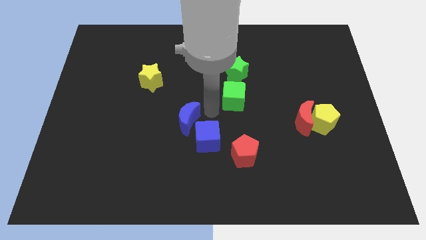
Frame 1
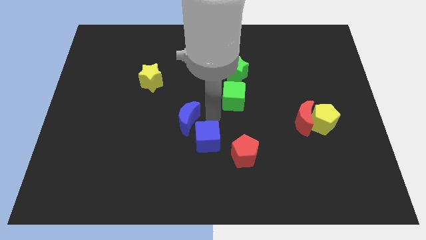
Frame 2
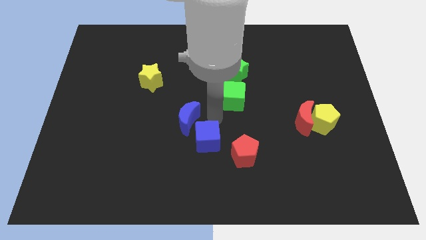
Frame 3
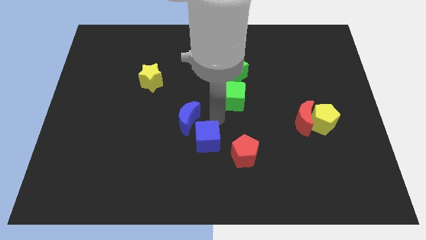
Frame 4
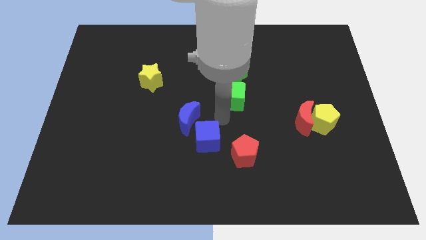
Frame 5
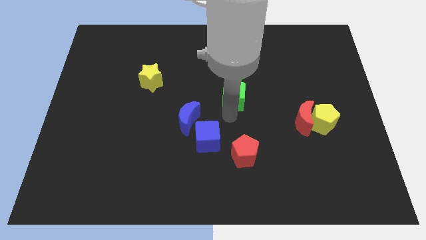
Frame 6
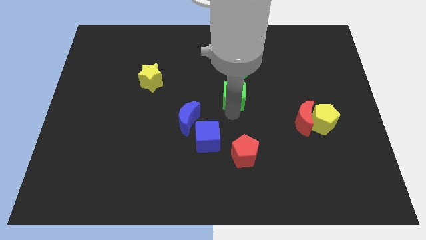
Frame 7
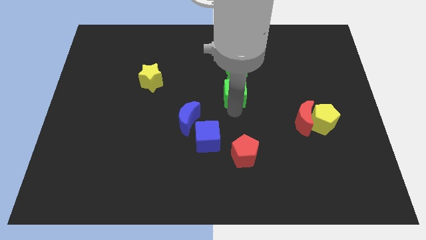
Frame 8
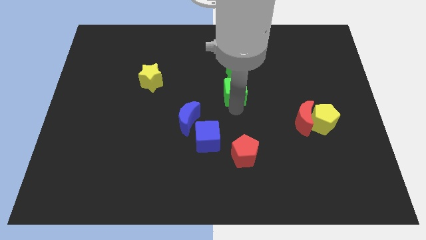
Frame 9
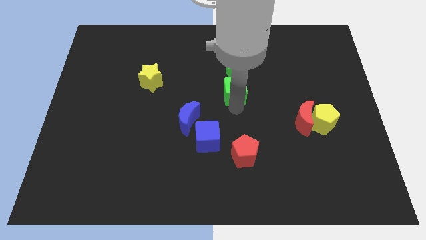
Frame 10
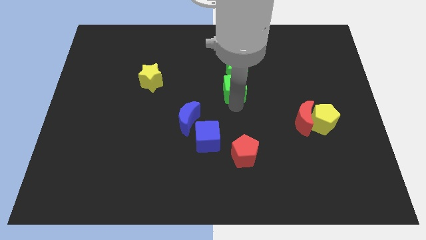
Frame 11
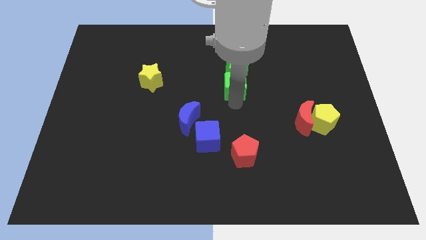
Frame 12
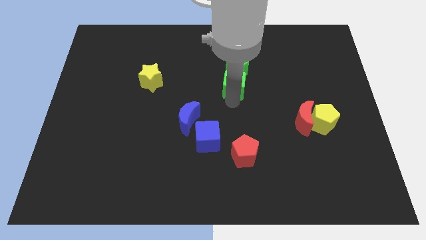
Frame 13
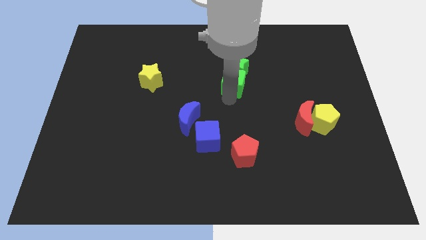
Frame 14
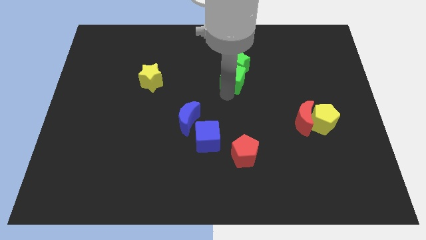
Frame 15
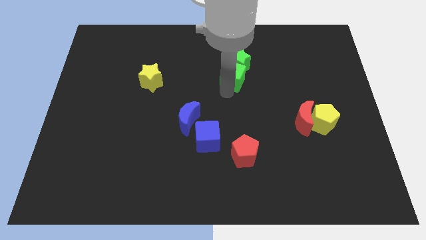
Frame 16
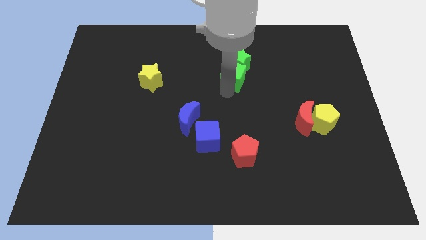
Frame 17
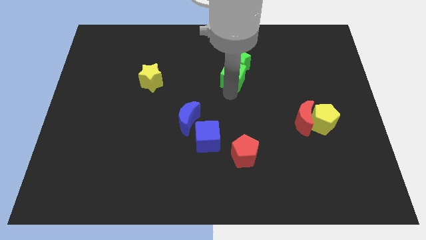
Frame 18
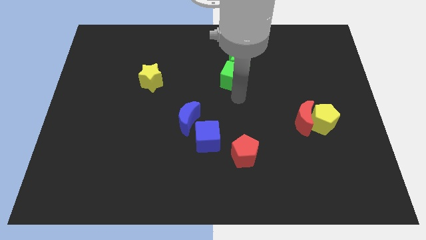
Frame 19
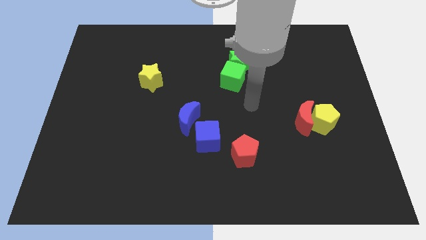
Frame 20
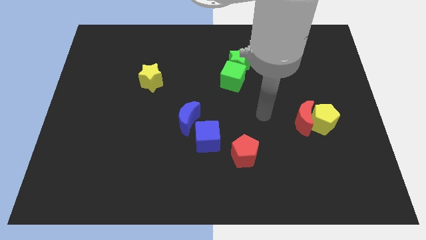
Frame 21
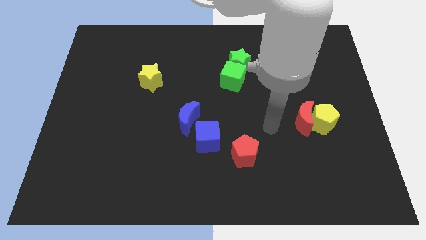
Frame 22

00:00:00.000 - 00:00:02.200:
push the green blocks upwards

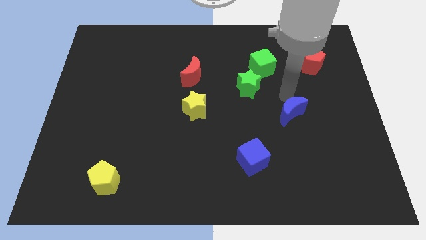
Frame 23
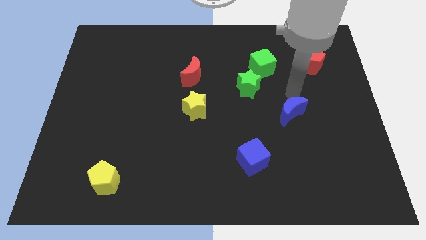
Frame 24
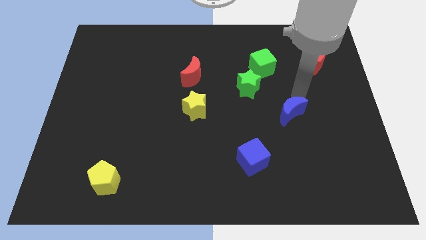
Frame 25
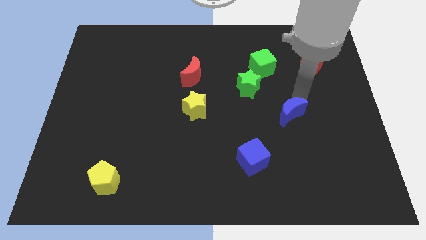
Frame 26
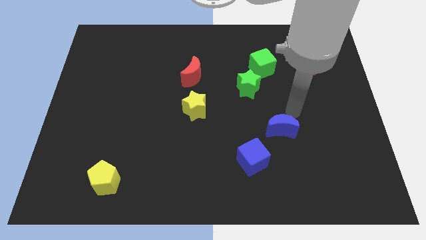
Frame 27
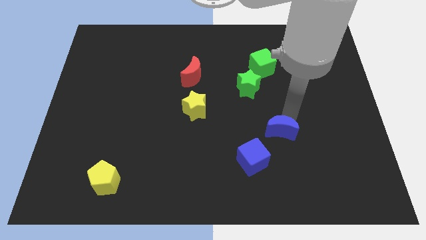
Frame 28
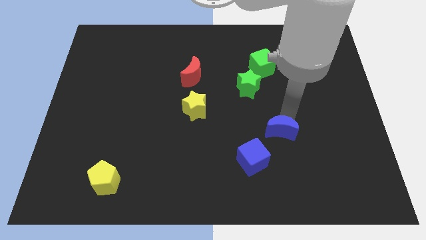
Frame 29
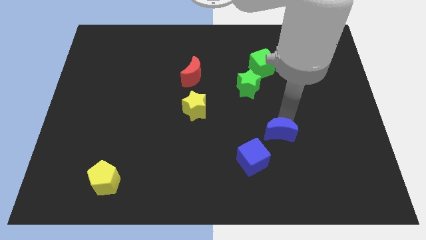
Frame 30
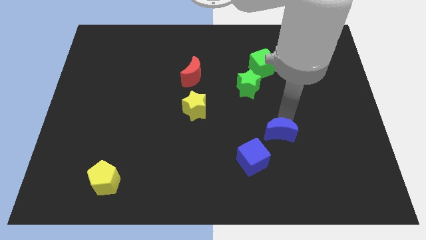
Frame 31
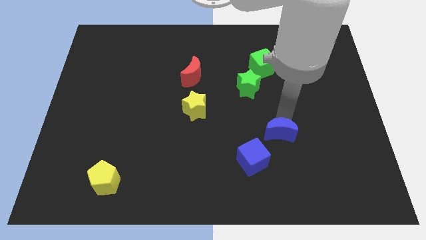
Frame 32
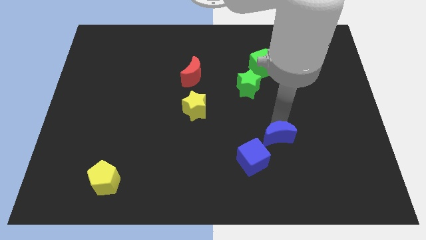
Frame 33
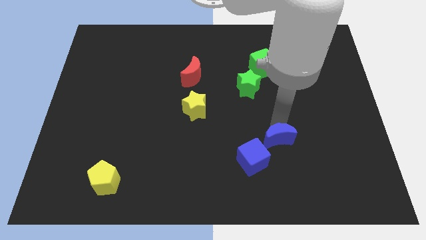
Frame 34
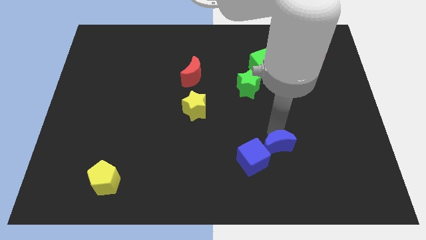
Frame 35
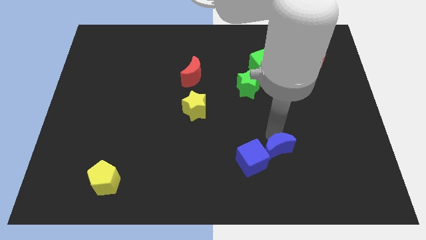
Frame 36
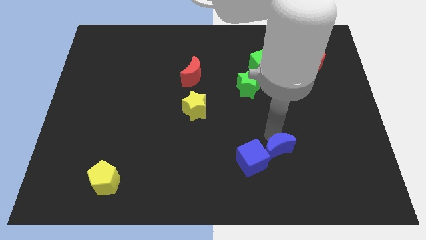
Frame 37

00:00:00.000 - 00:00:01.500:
push the blue crescent into the blue cube

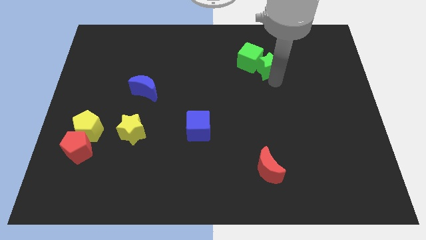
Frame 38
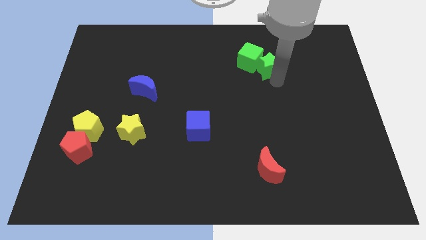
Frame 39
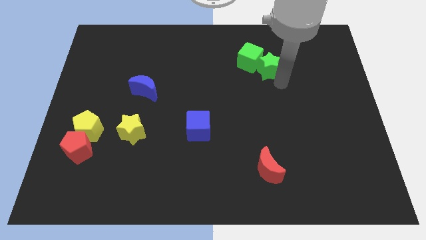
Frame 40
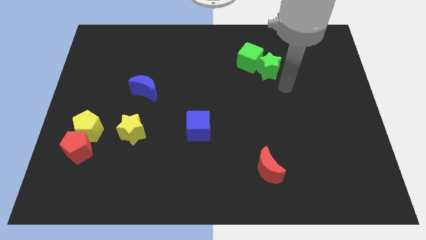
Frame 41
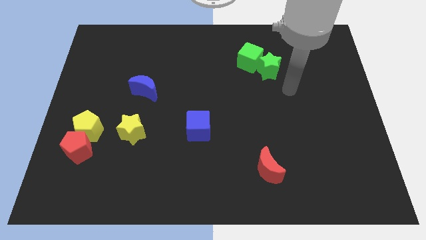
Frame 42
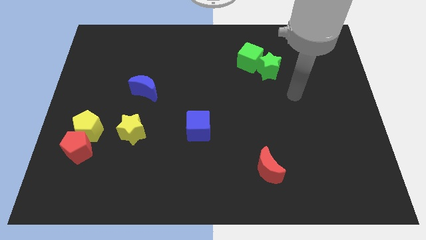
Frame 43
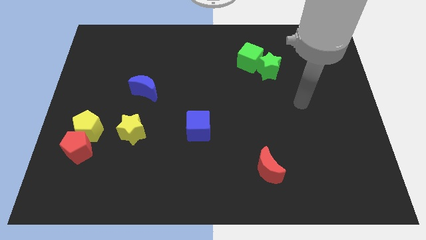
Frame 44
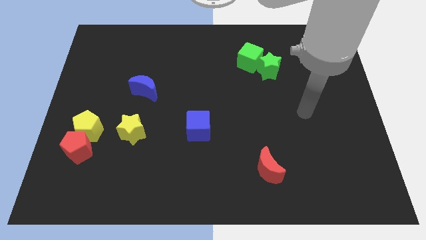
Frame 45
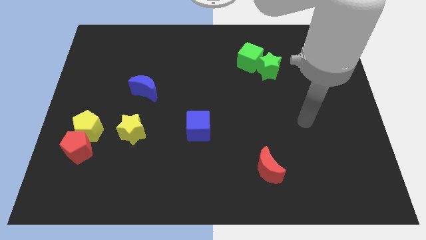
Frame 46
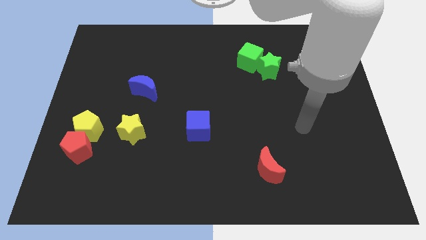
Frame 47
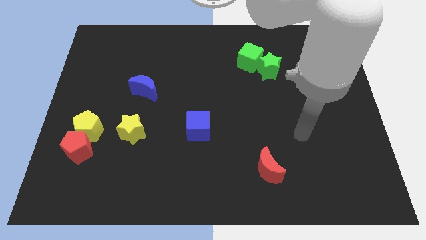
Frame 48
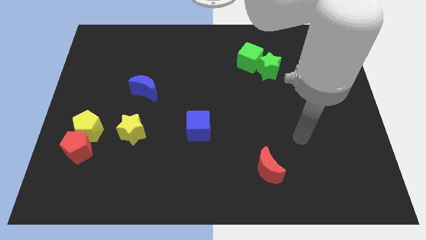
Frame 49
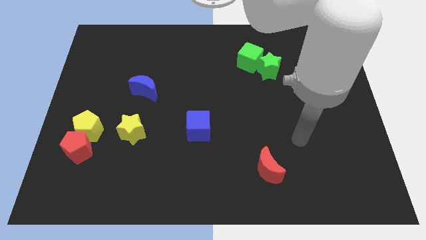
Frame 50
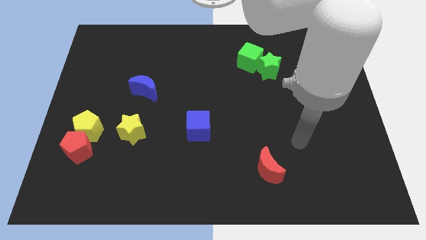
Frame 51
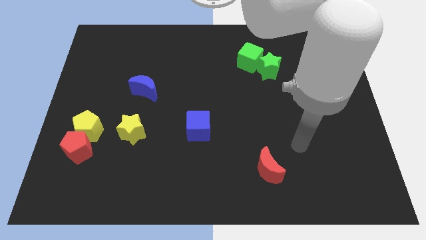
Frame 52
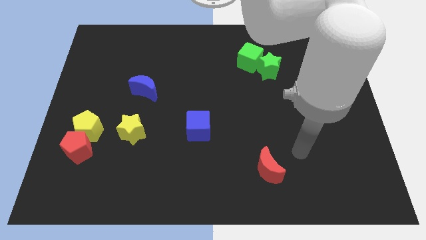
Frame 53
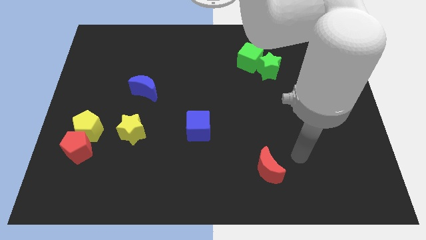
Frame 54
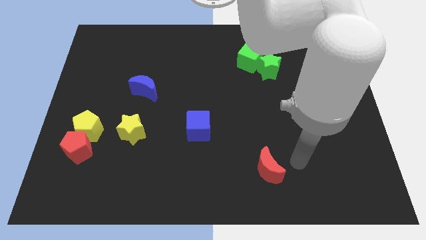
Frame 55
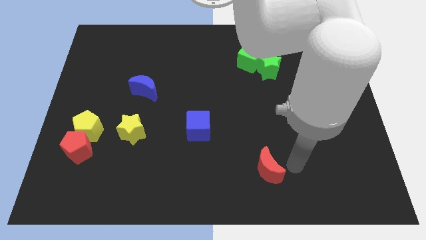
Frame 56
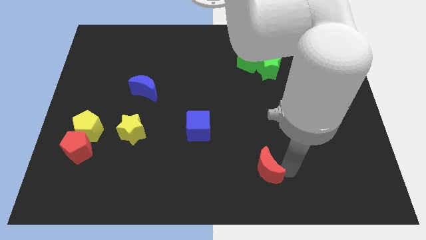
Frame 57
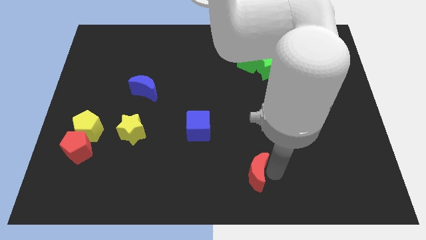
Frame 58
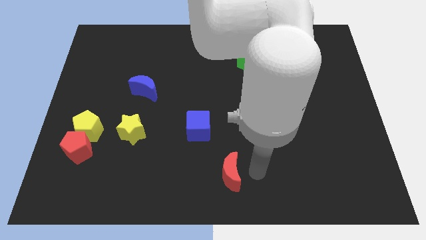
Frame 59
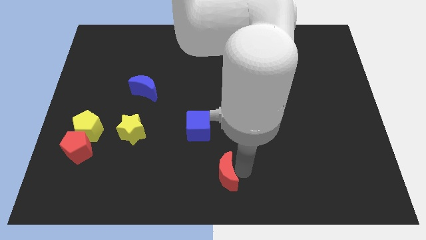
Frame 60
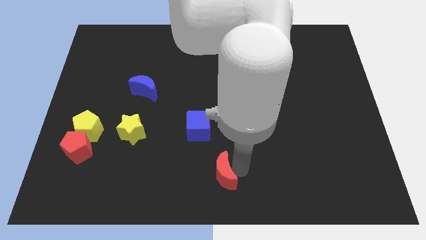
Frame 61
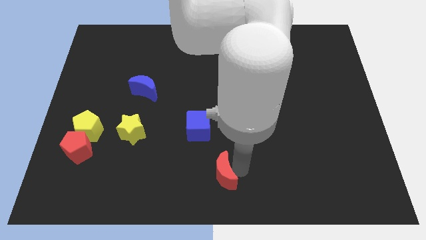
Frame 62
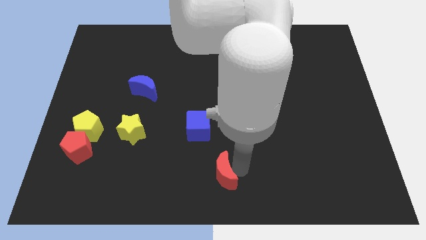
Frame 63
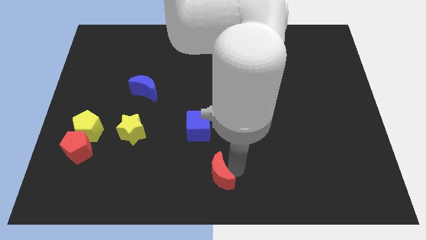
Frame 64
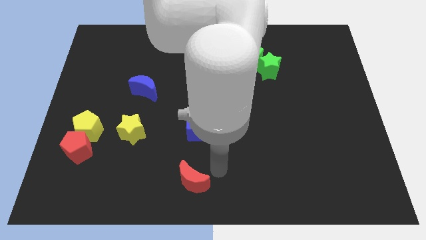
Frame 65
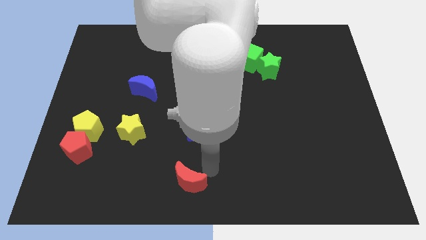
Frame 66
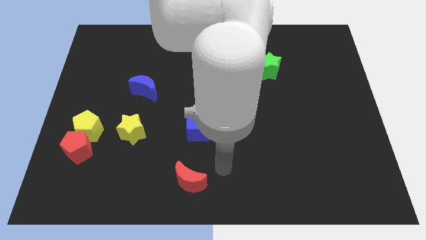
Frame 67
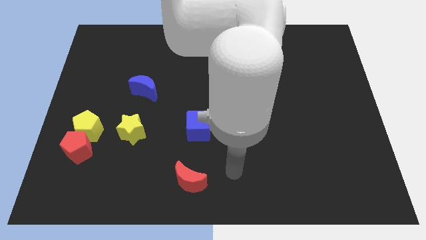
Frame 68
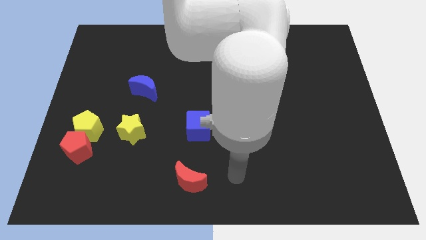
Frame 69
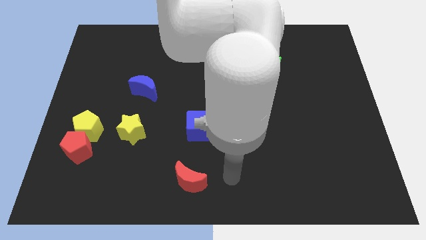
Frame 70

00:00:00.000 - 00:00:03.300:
put the red crescent vertically below the blue cube

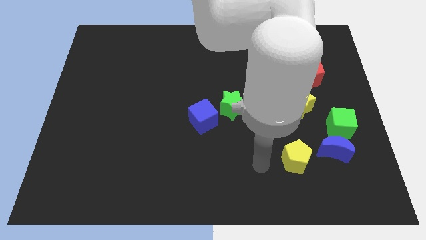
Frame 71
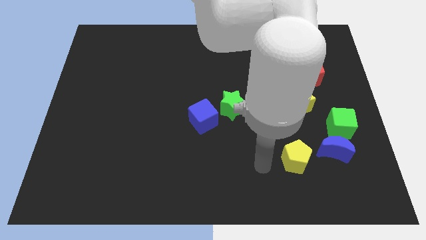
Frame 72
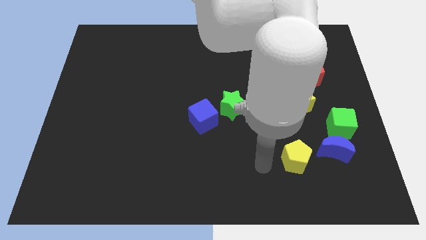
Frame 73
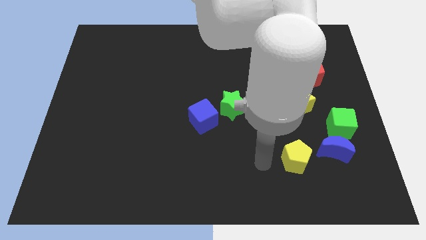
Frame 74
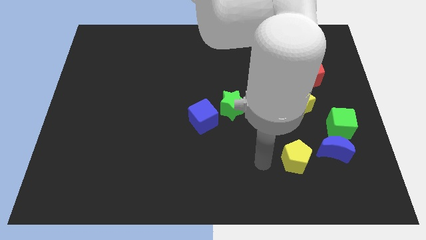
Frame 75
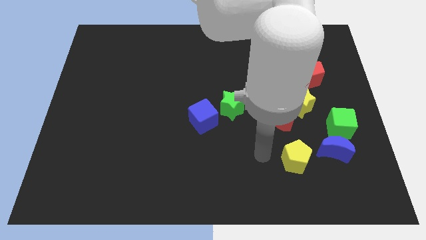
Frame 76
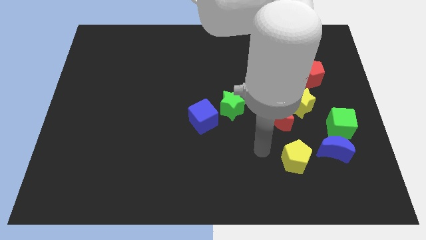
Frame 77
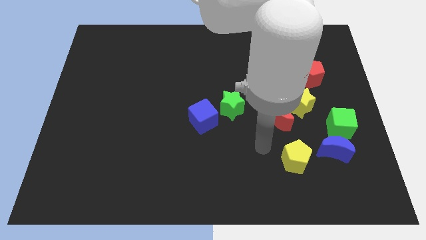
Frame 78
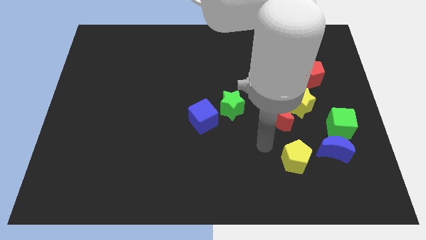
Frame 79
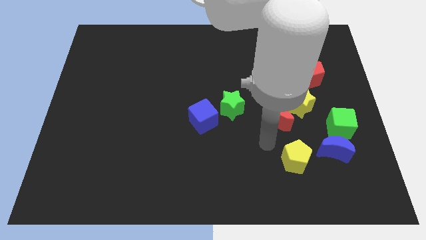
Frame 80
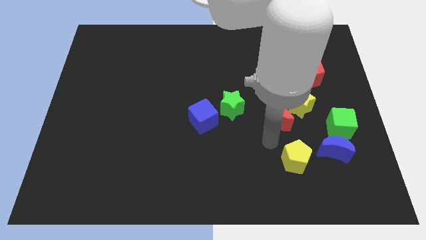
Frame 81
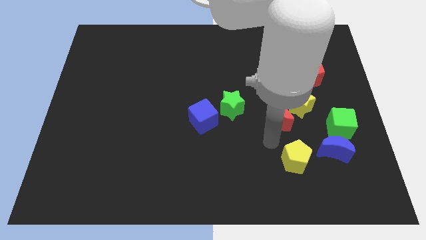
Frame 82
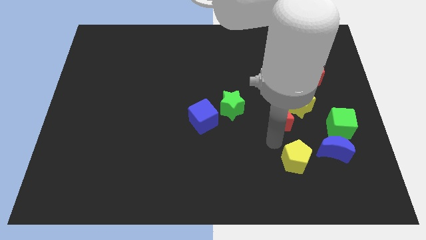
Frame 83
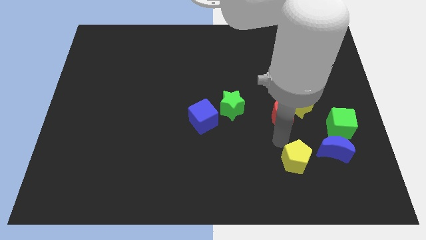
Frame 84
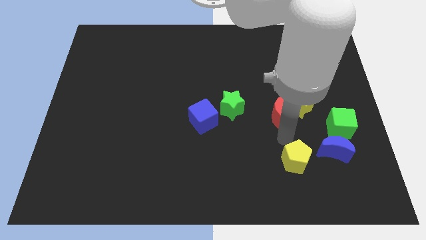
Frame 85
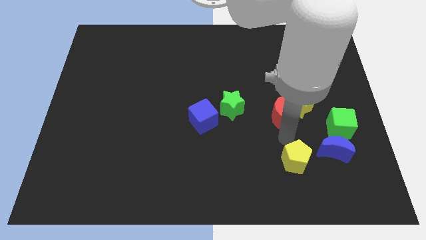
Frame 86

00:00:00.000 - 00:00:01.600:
place your arm down to the red moon

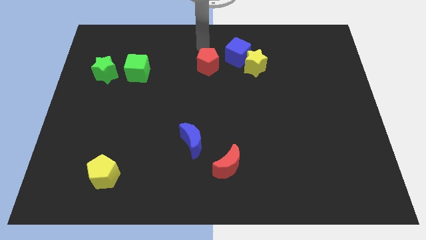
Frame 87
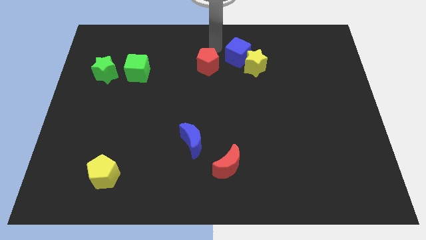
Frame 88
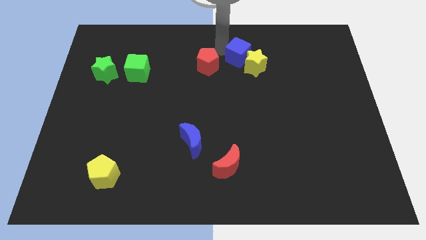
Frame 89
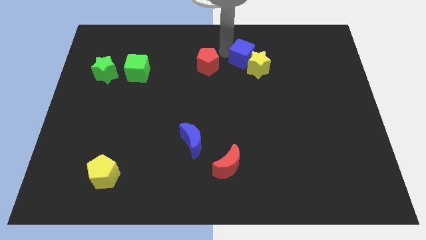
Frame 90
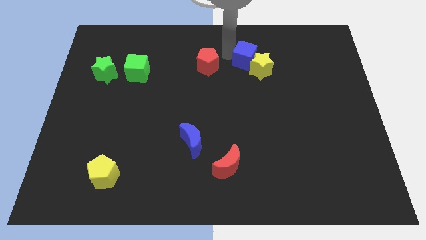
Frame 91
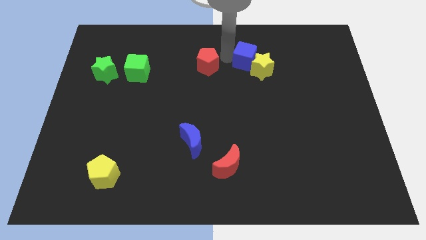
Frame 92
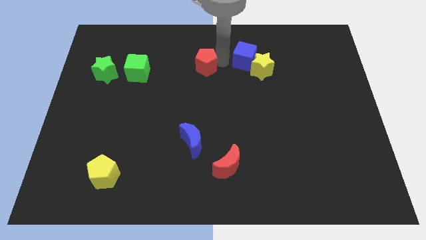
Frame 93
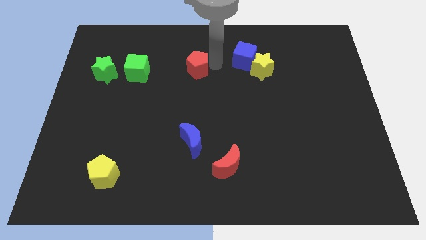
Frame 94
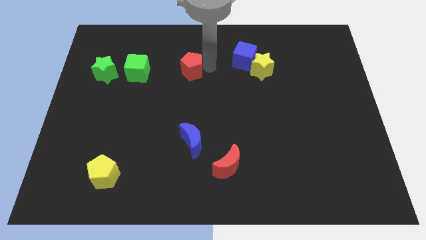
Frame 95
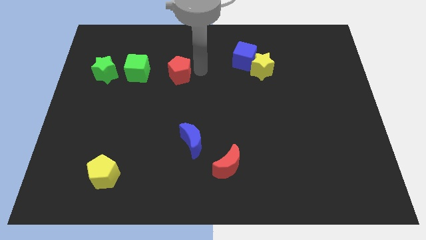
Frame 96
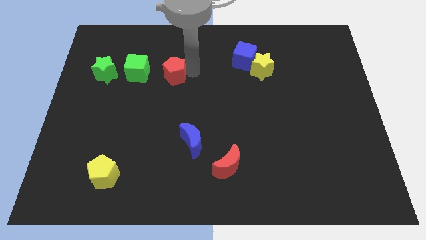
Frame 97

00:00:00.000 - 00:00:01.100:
slightly move the blue cube into yellow star
